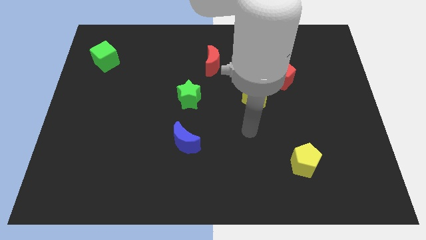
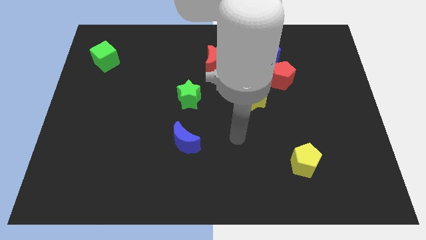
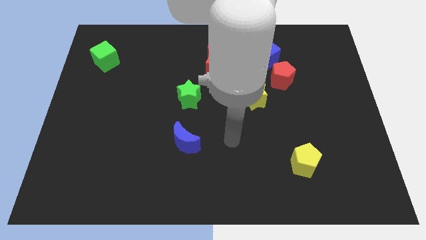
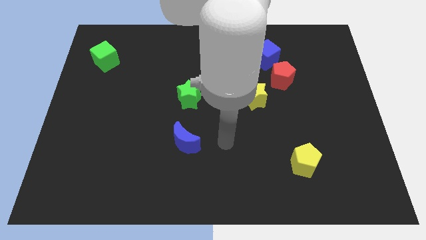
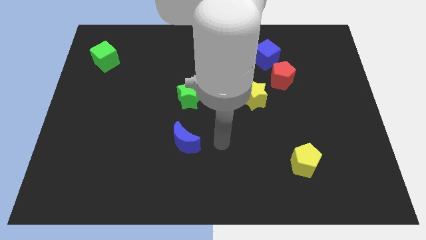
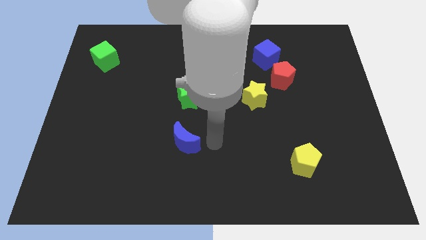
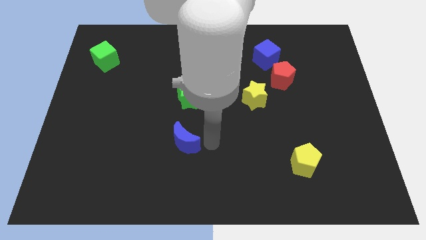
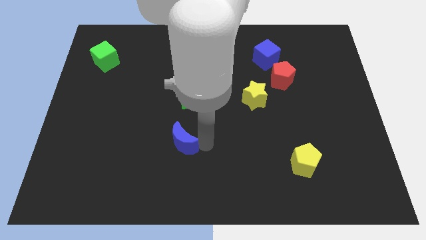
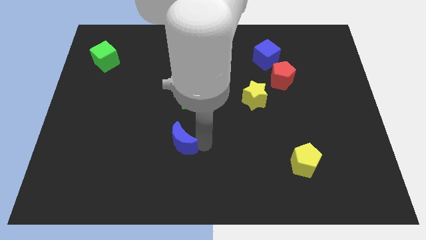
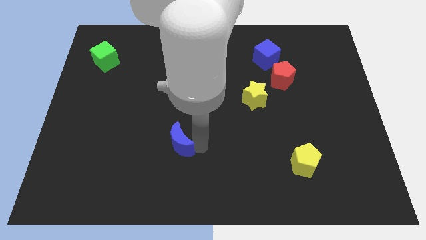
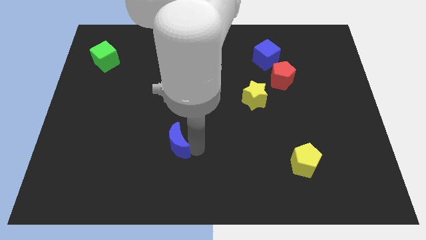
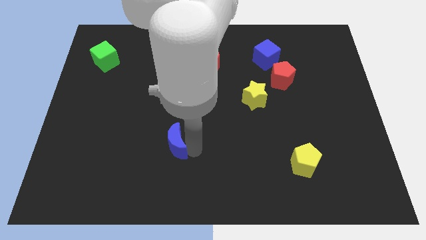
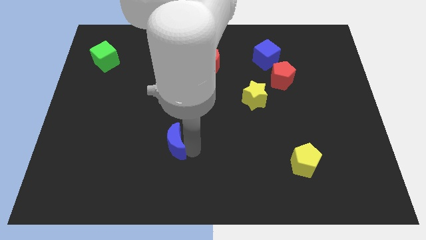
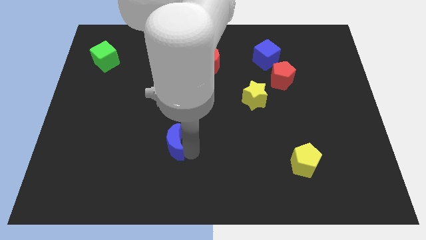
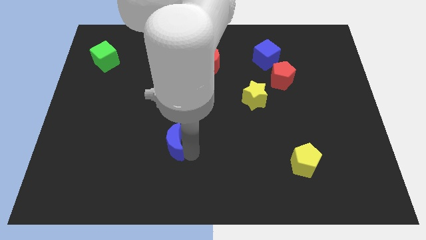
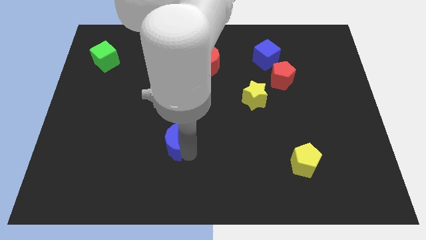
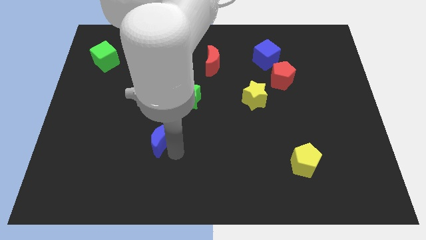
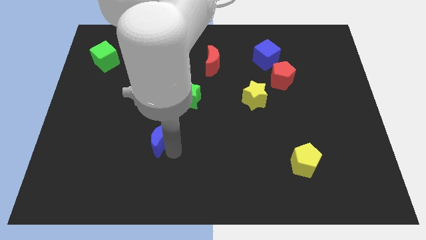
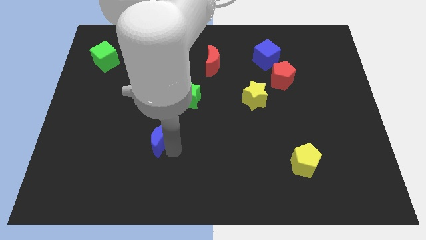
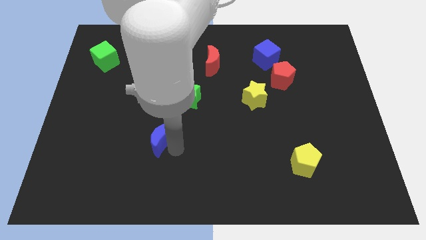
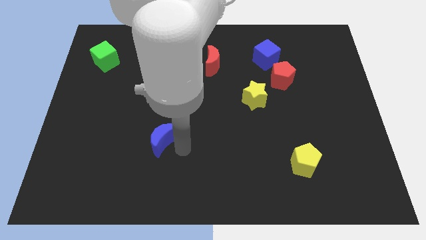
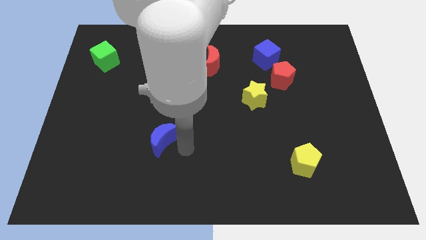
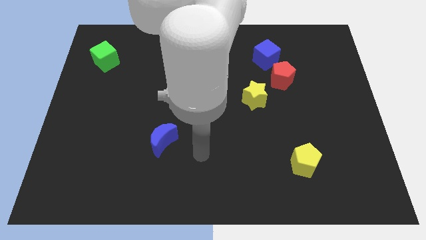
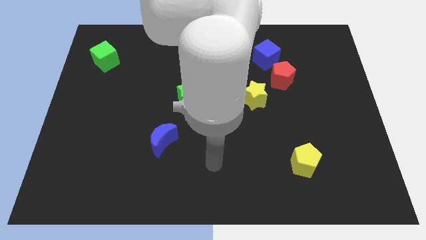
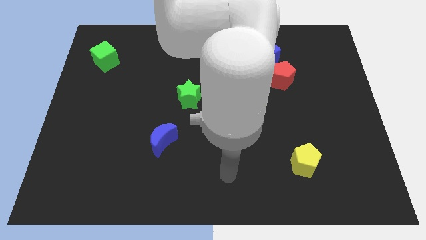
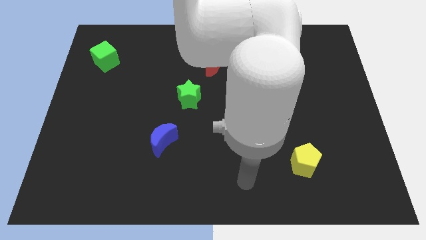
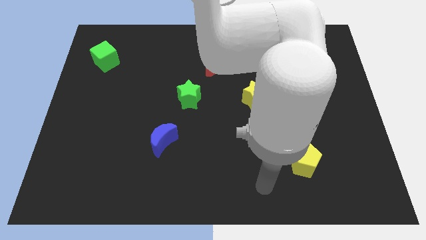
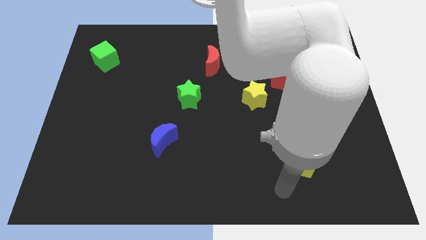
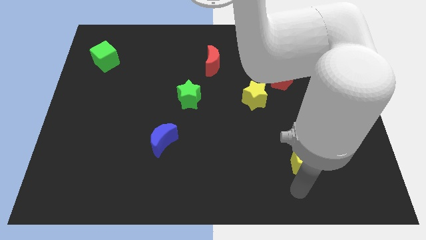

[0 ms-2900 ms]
move the blue moon slightly to the left of the board

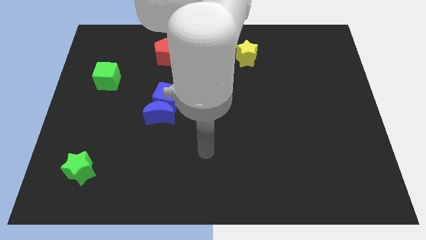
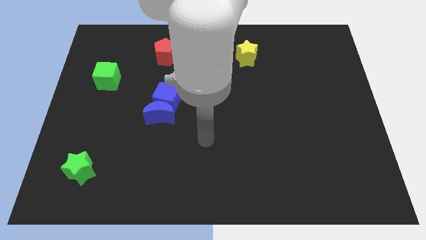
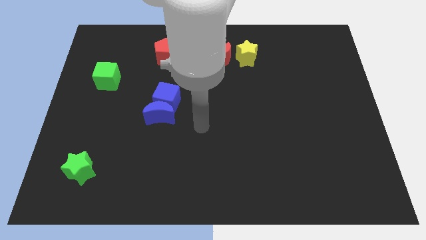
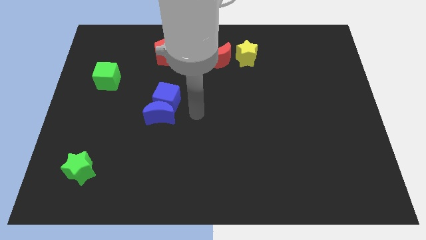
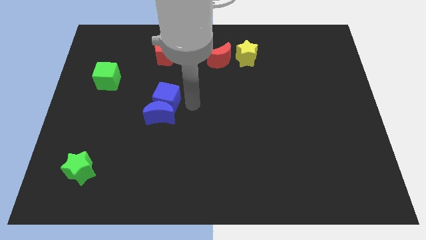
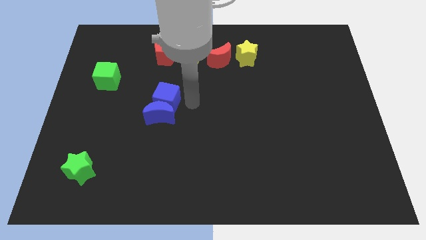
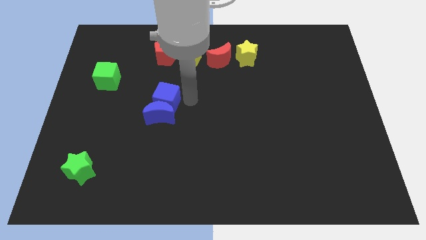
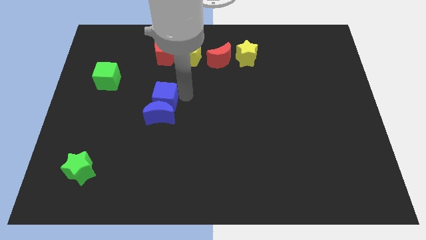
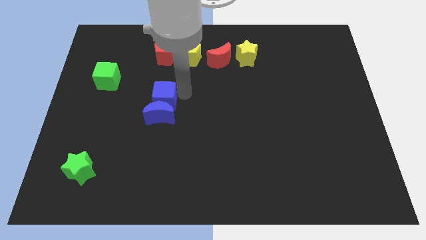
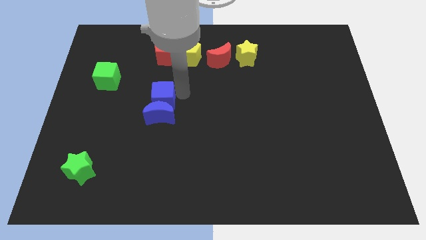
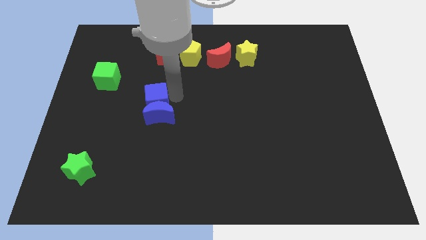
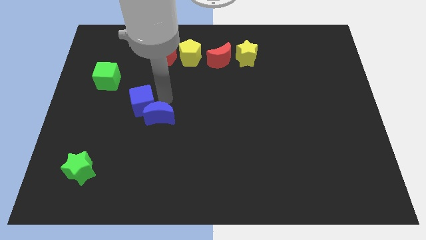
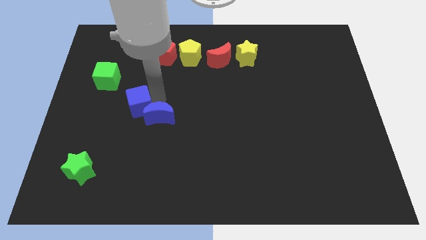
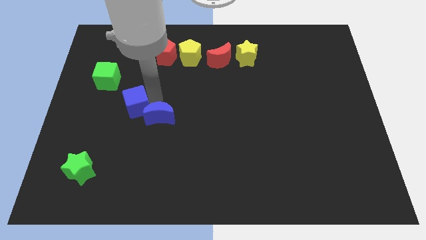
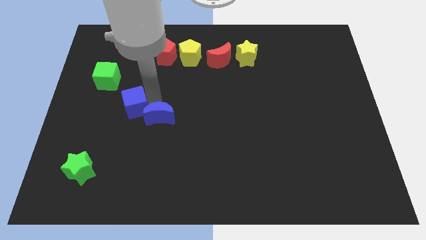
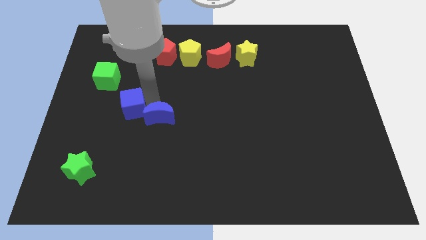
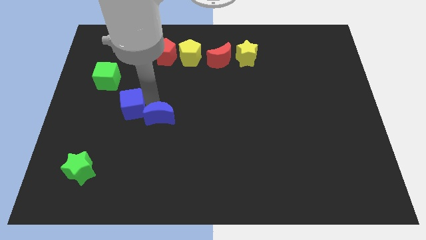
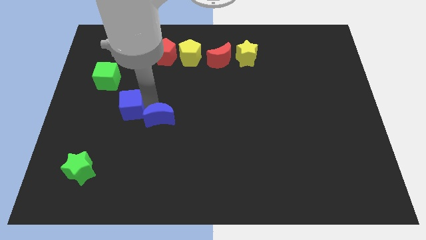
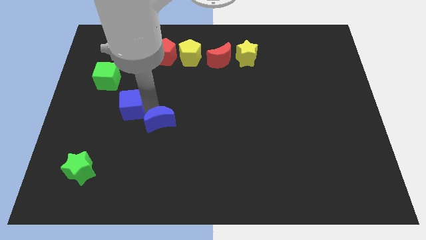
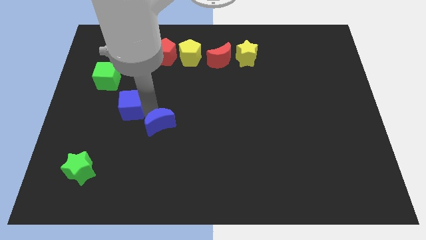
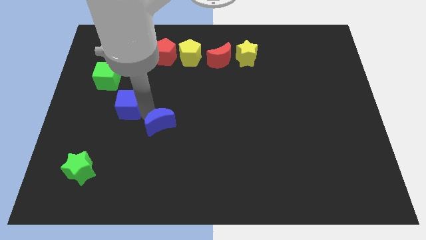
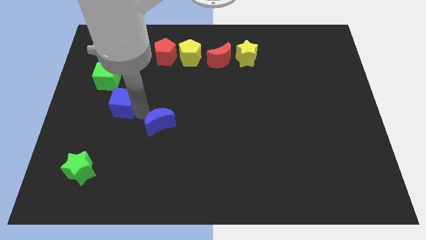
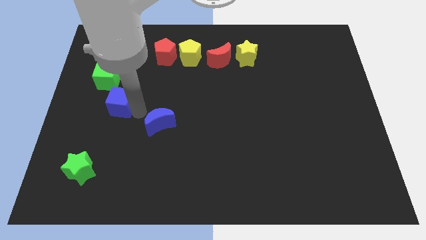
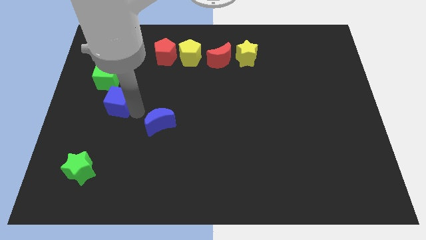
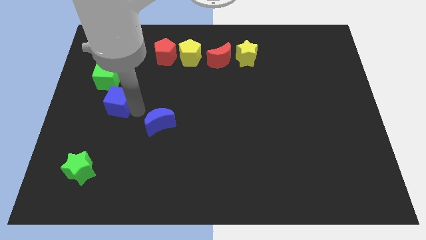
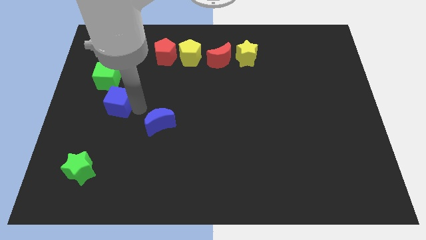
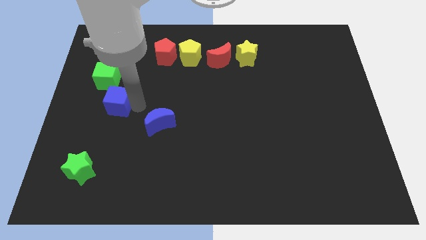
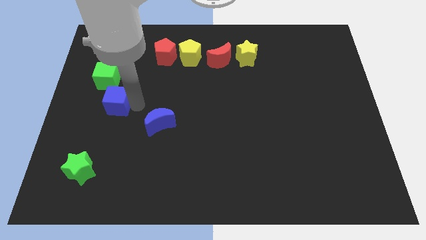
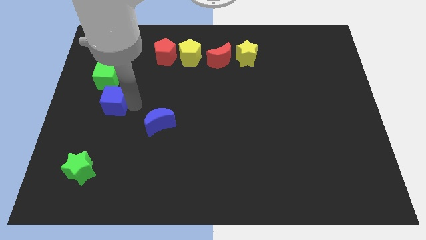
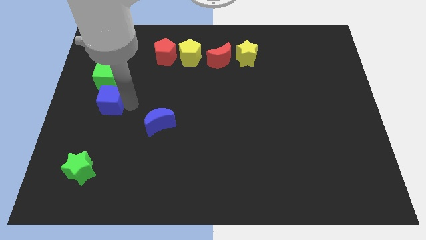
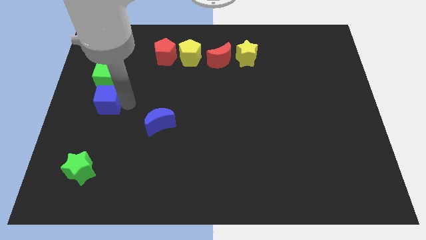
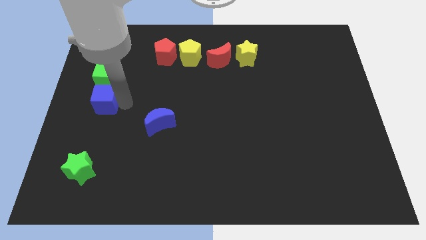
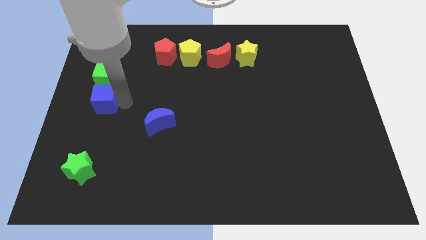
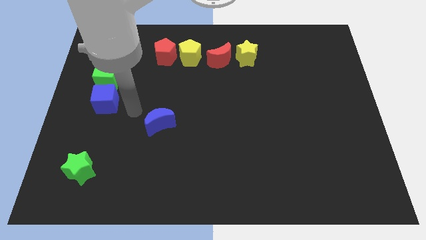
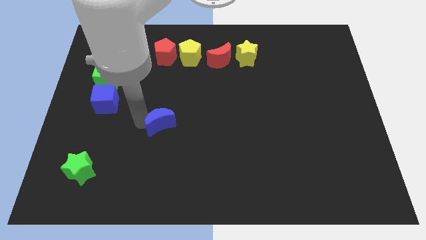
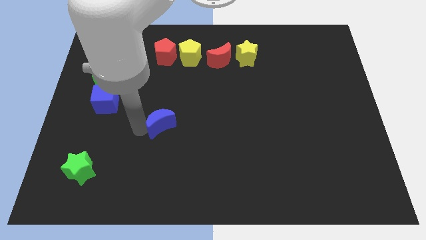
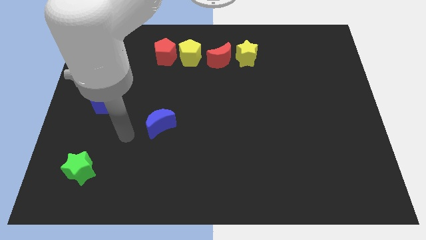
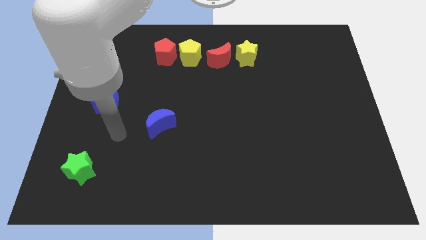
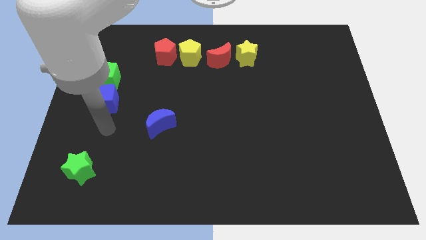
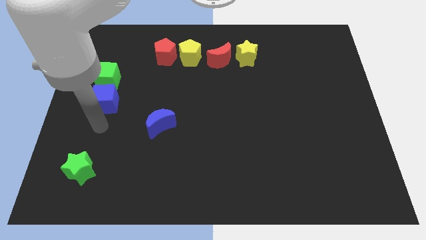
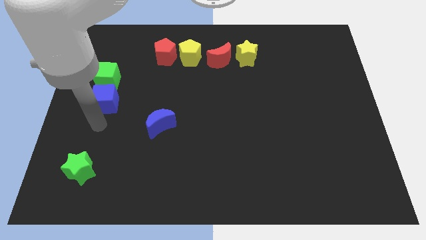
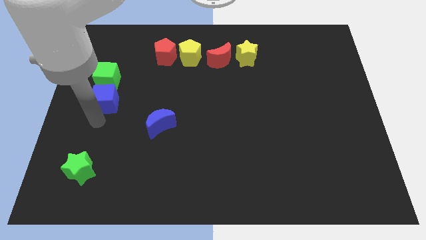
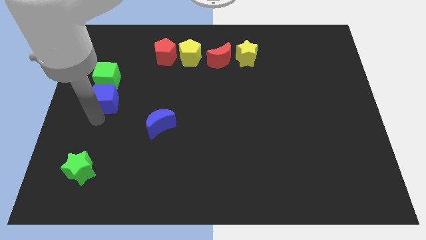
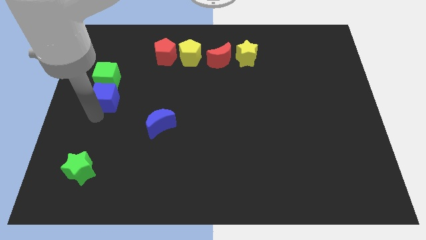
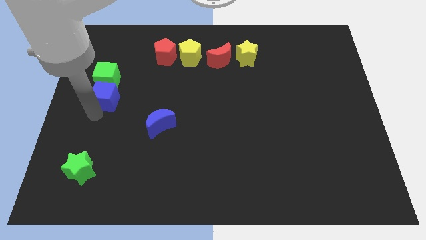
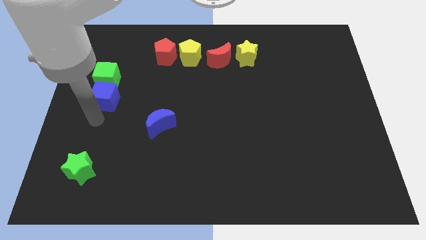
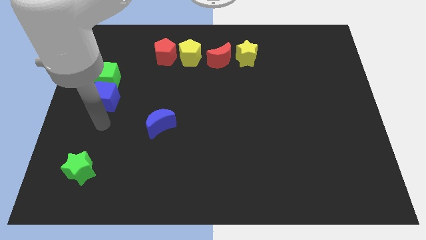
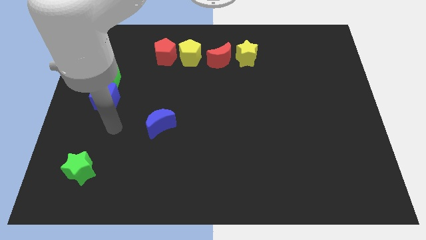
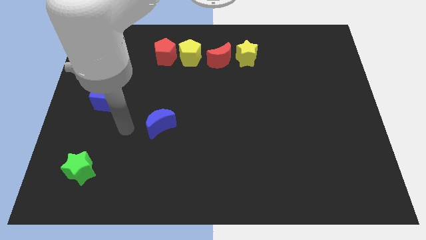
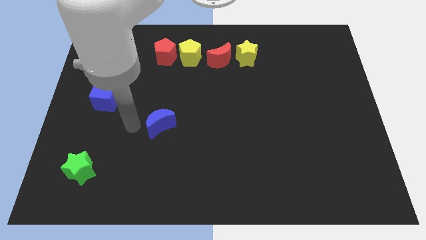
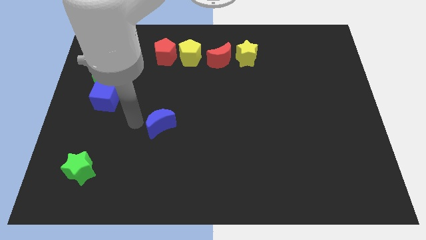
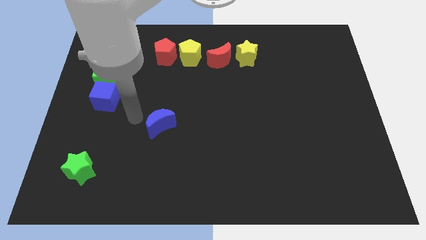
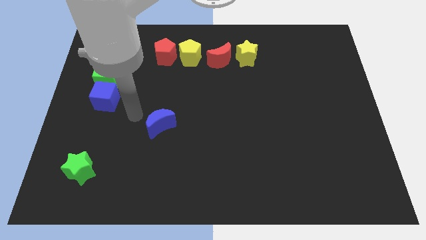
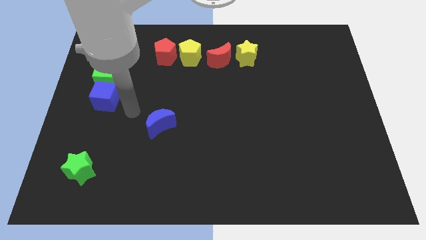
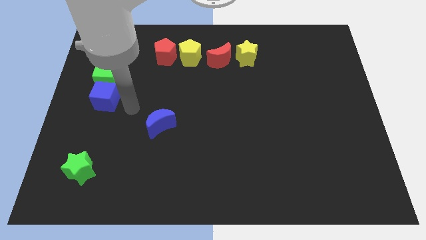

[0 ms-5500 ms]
move the blue cube below the green cube

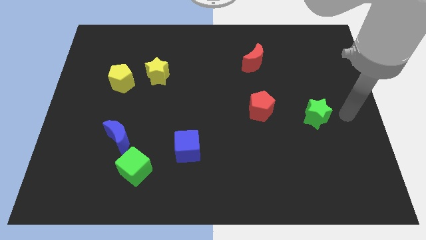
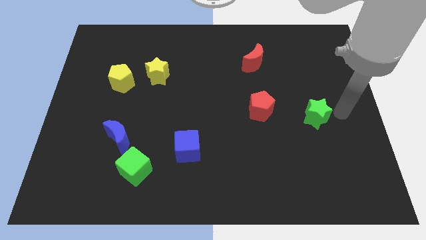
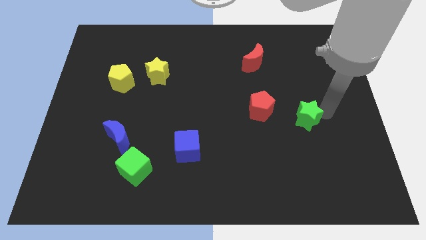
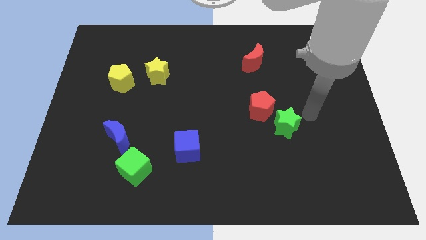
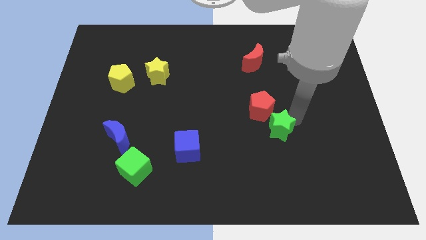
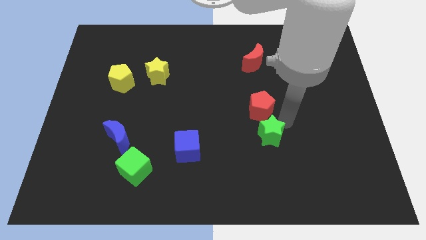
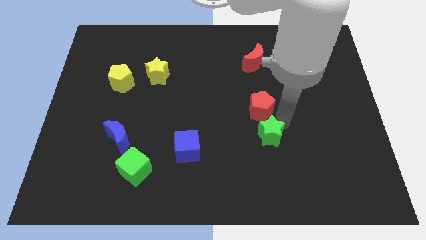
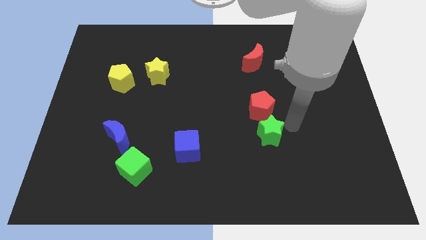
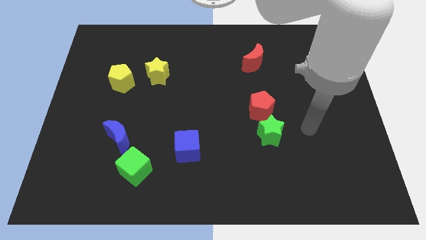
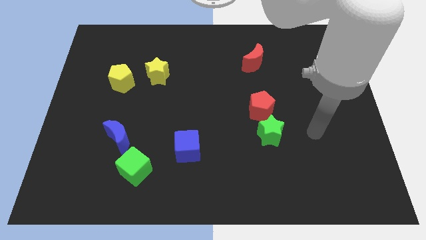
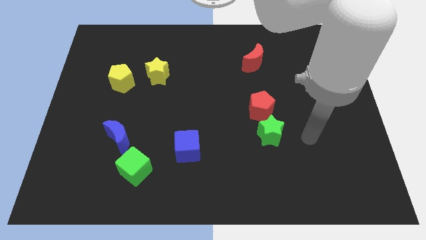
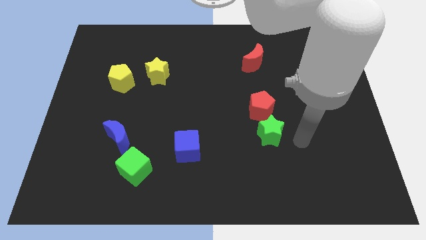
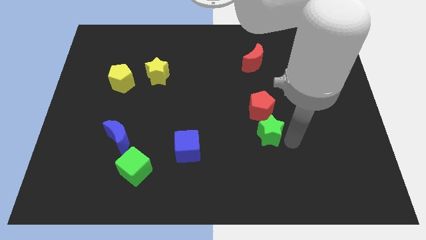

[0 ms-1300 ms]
move the green star below the red pentagon
